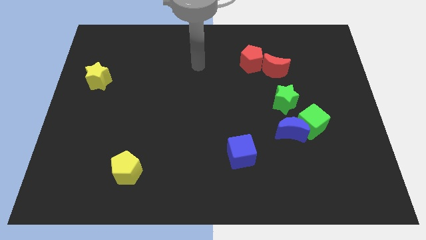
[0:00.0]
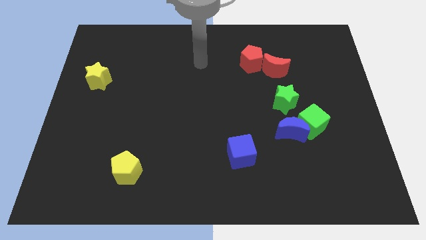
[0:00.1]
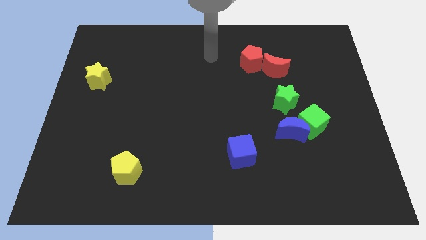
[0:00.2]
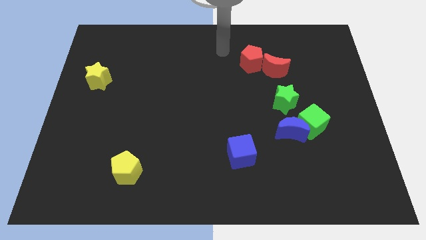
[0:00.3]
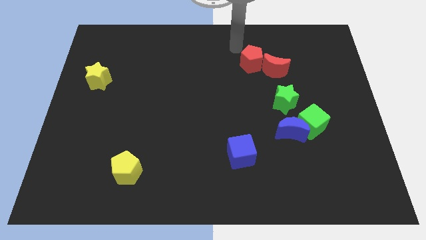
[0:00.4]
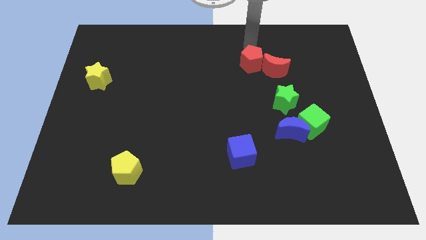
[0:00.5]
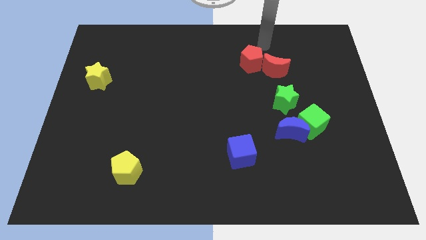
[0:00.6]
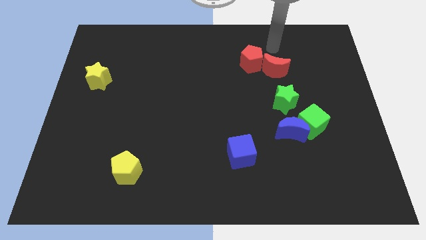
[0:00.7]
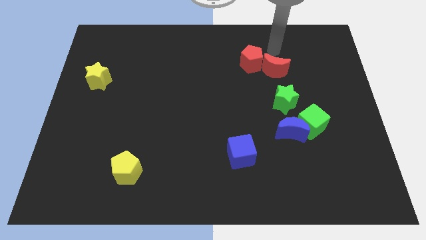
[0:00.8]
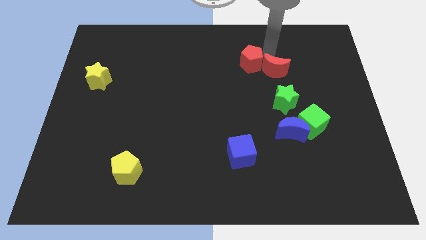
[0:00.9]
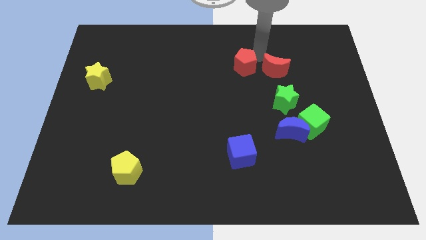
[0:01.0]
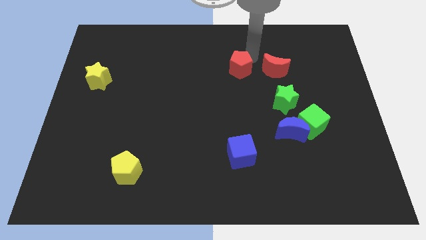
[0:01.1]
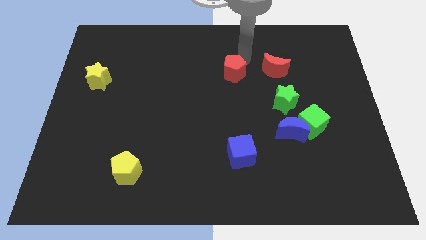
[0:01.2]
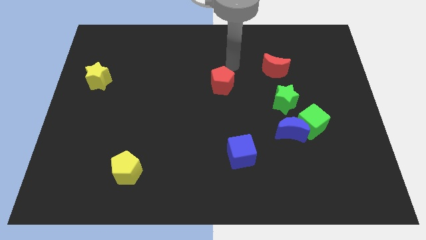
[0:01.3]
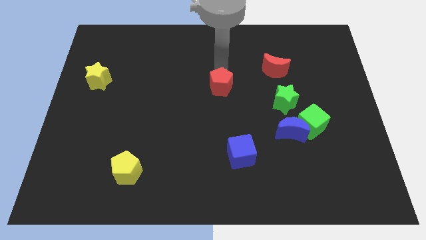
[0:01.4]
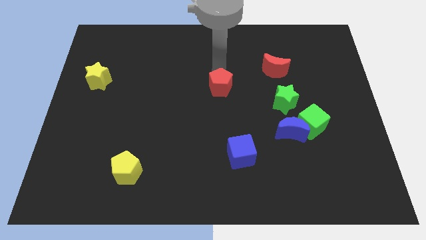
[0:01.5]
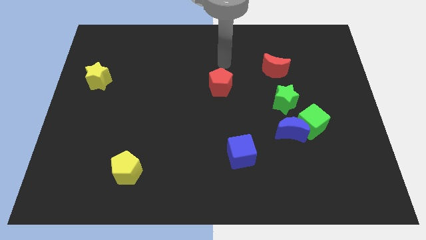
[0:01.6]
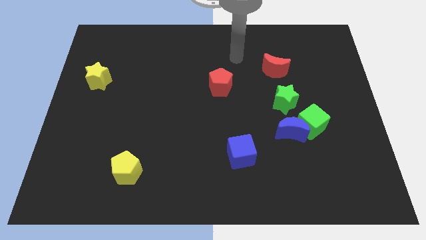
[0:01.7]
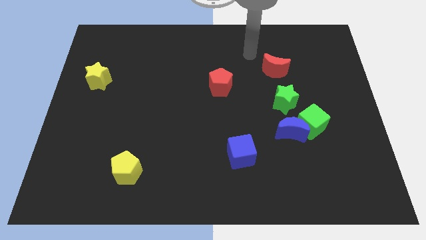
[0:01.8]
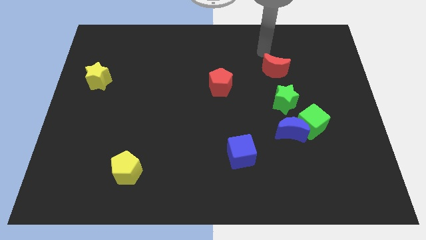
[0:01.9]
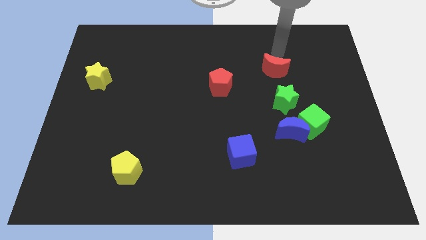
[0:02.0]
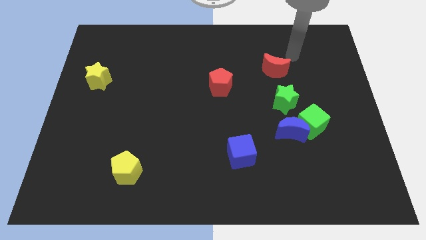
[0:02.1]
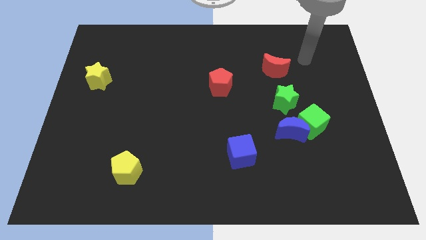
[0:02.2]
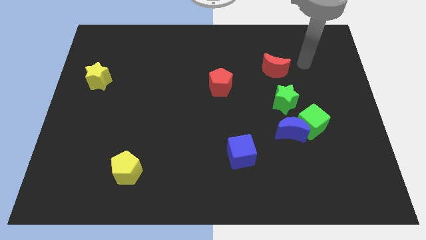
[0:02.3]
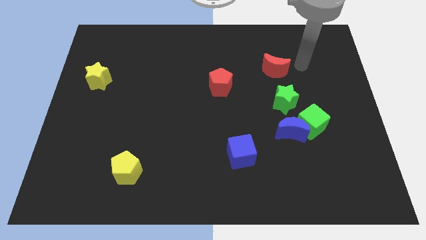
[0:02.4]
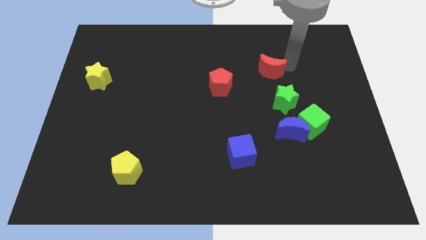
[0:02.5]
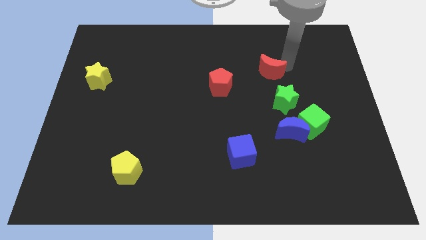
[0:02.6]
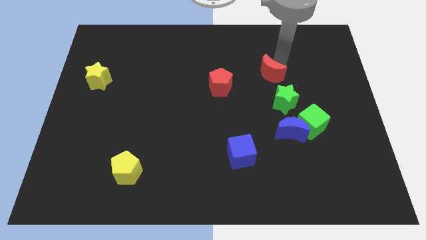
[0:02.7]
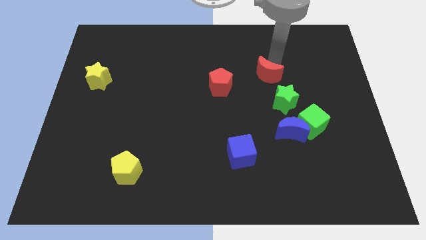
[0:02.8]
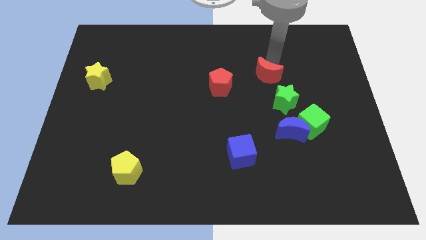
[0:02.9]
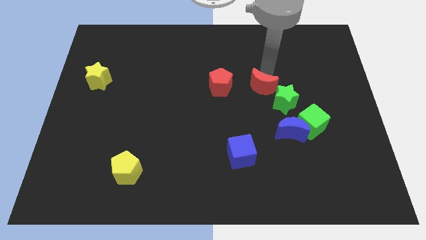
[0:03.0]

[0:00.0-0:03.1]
move red block towards the center

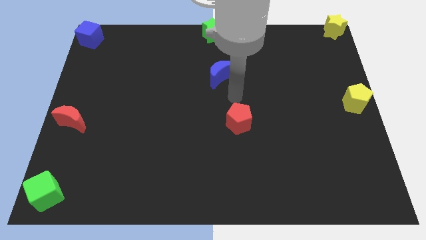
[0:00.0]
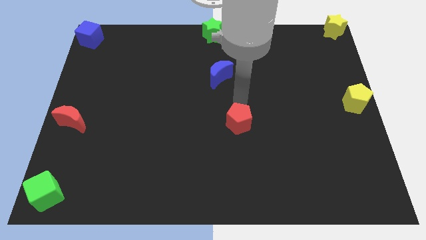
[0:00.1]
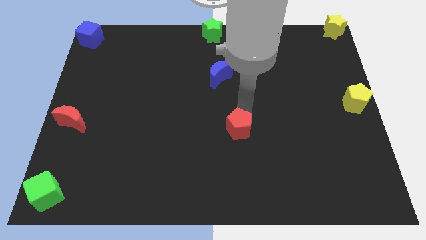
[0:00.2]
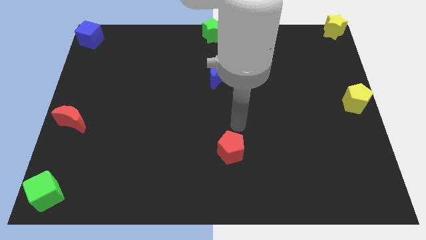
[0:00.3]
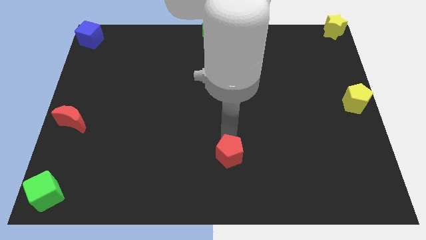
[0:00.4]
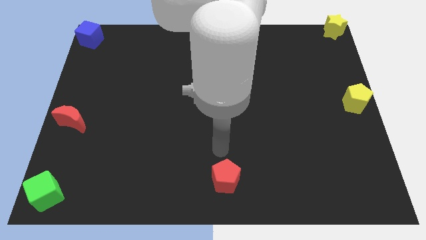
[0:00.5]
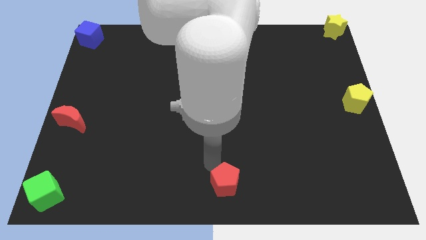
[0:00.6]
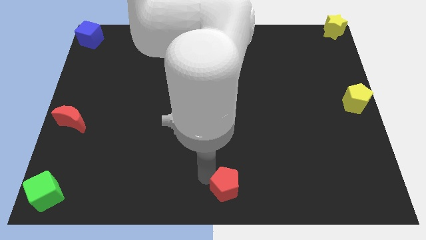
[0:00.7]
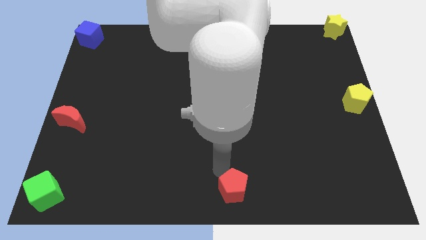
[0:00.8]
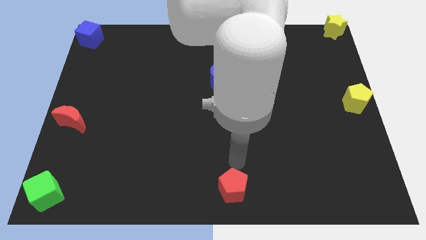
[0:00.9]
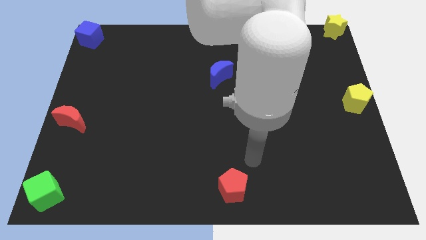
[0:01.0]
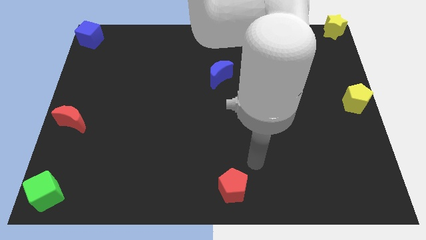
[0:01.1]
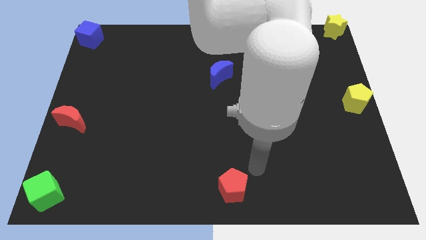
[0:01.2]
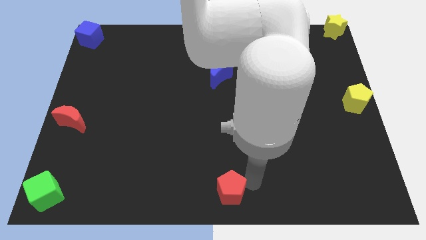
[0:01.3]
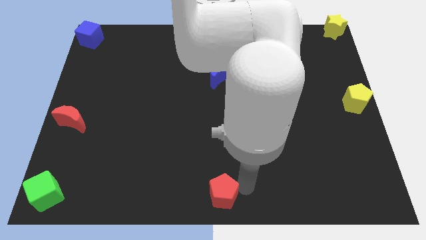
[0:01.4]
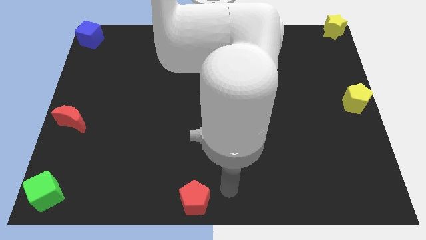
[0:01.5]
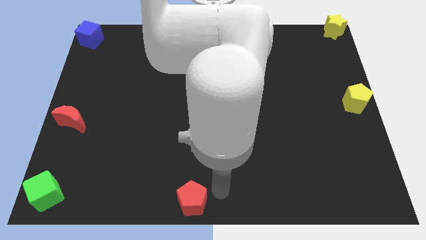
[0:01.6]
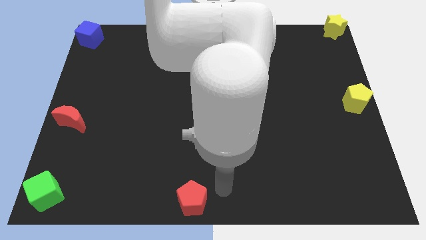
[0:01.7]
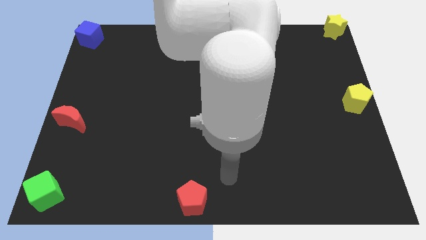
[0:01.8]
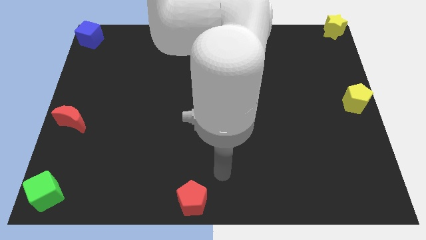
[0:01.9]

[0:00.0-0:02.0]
place the red pentagon into the bottom center

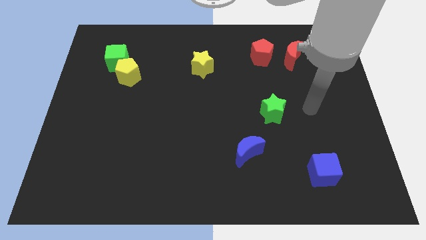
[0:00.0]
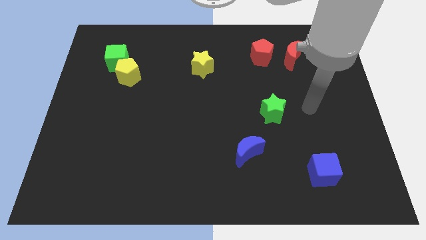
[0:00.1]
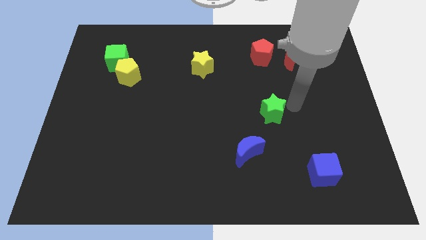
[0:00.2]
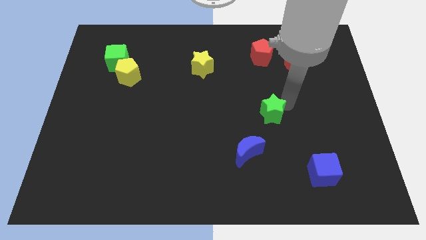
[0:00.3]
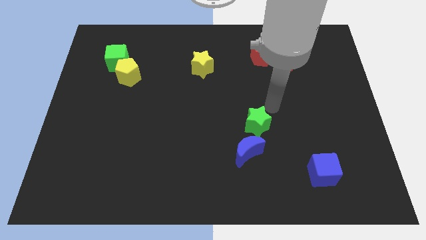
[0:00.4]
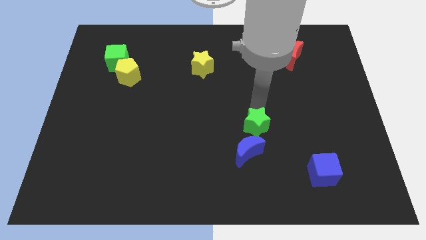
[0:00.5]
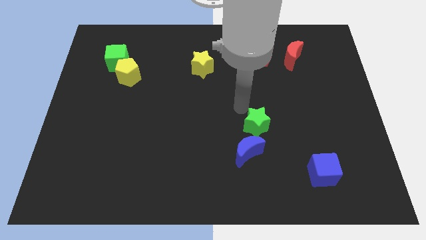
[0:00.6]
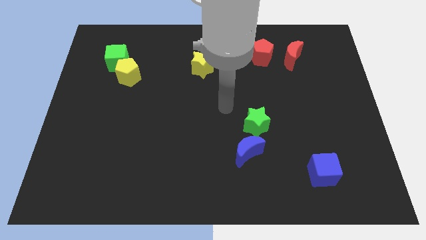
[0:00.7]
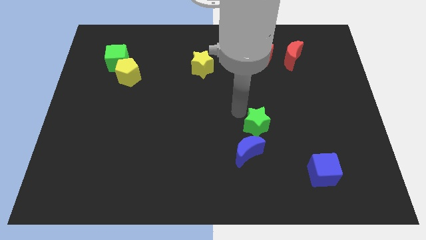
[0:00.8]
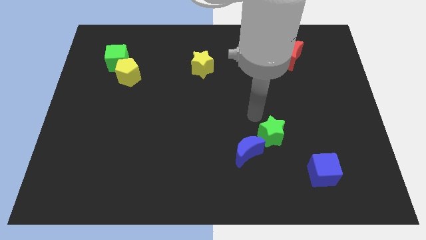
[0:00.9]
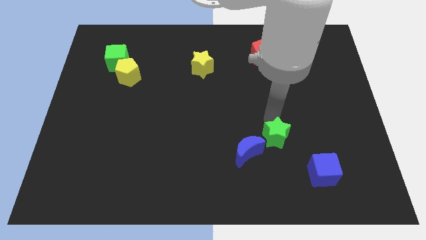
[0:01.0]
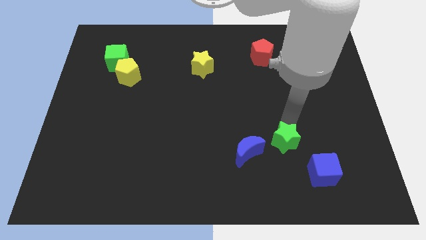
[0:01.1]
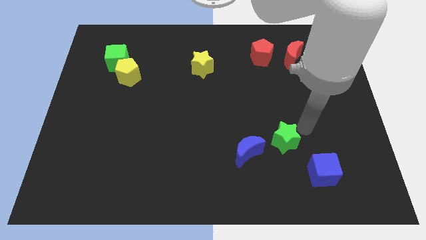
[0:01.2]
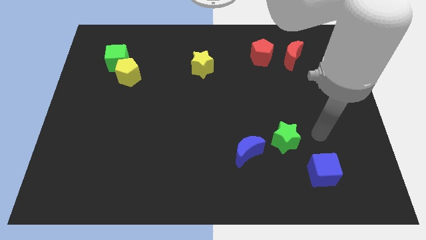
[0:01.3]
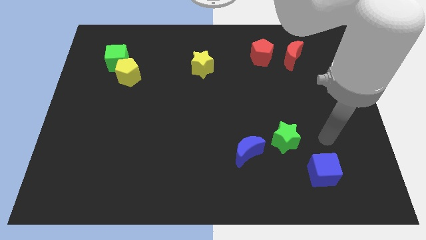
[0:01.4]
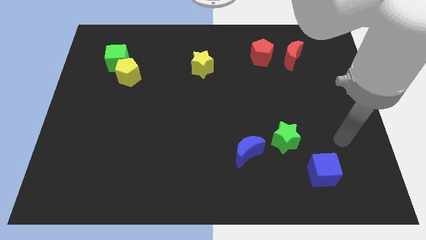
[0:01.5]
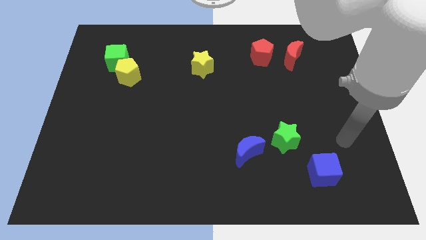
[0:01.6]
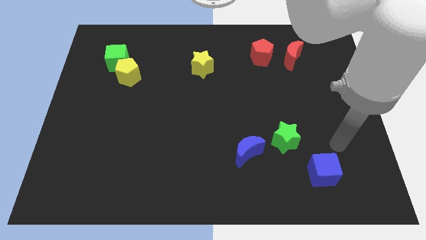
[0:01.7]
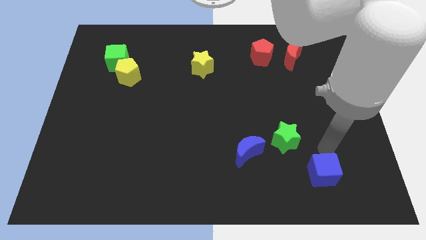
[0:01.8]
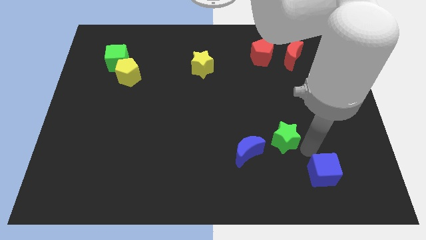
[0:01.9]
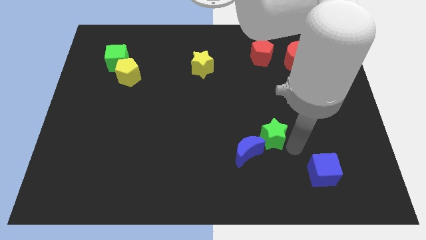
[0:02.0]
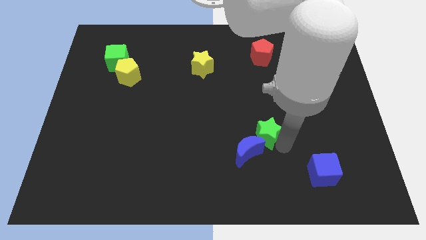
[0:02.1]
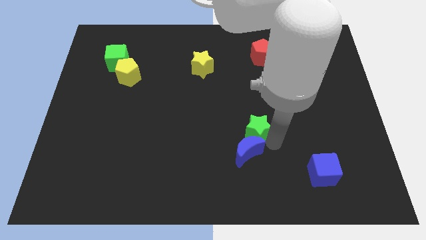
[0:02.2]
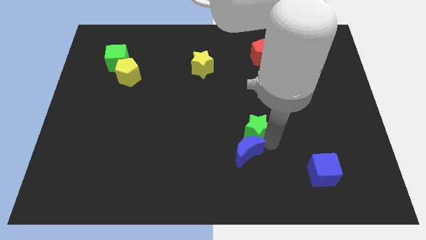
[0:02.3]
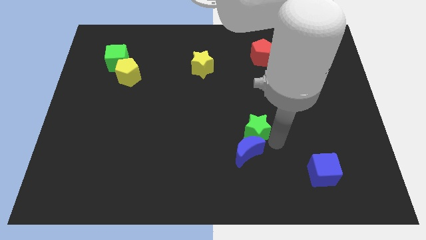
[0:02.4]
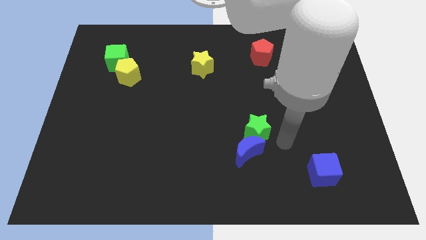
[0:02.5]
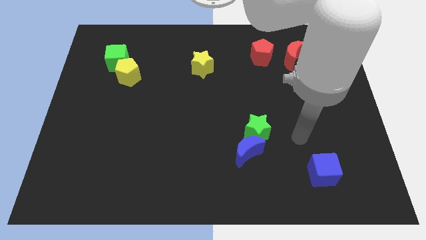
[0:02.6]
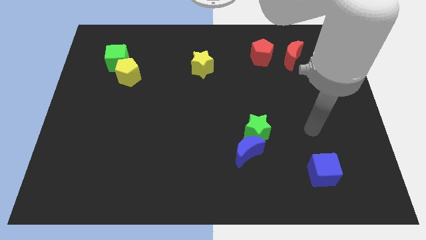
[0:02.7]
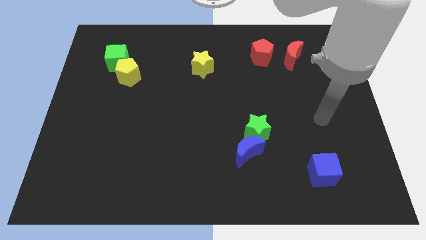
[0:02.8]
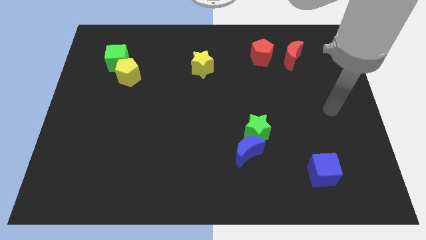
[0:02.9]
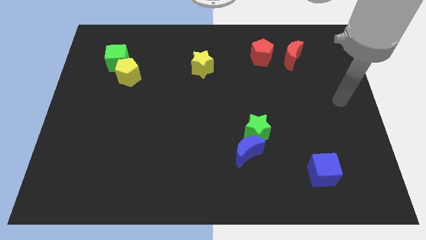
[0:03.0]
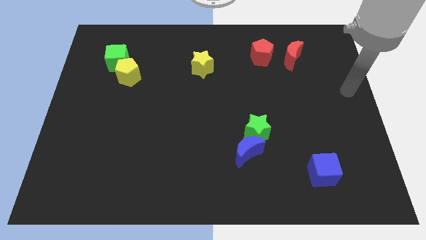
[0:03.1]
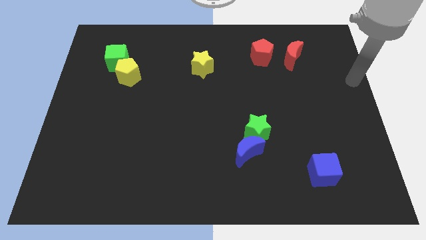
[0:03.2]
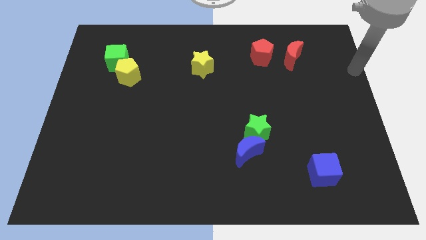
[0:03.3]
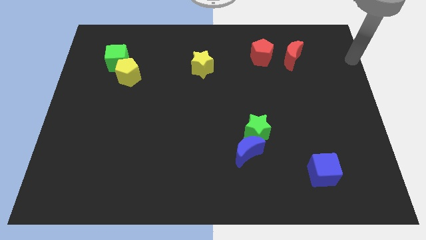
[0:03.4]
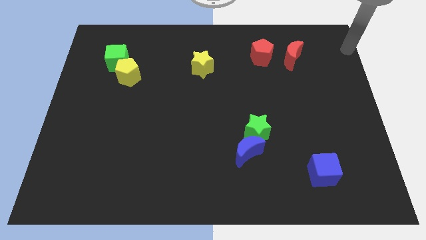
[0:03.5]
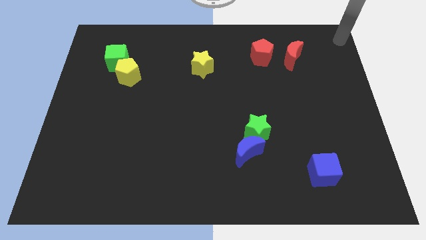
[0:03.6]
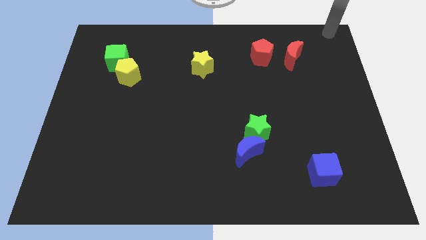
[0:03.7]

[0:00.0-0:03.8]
push the green star towards the blue crescent
